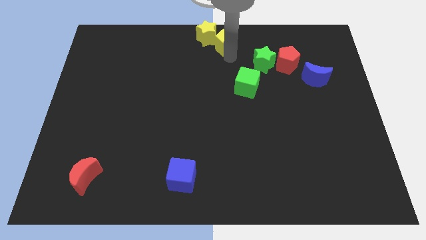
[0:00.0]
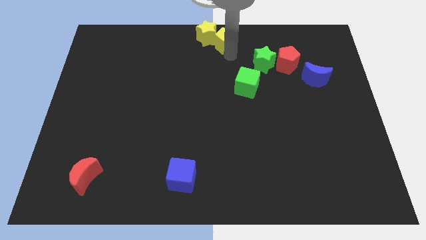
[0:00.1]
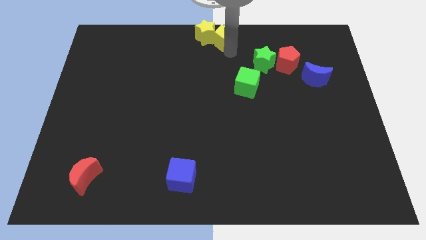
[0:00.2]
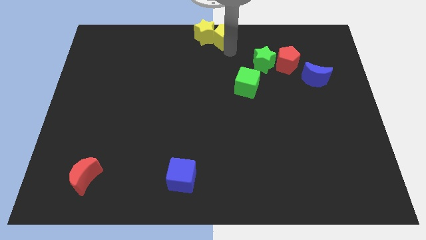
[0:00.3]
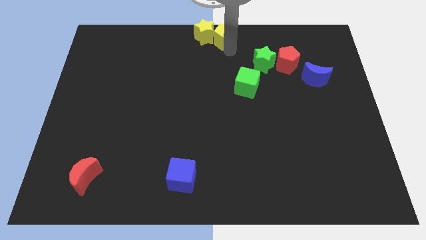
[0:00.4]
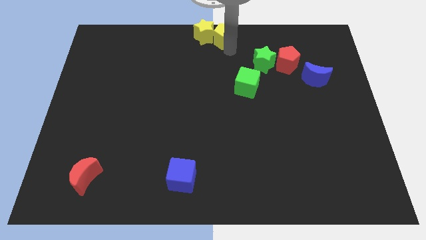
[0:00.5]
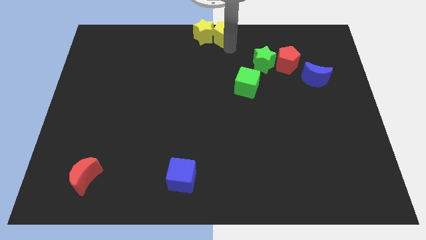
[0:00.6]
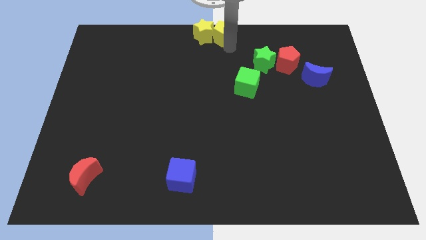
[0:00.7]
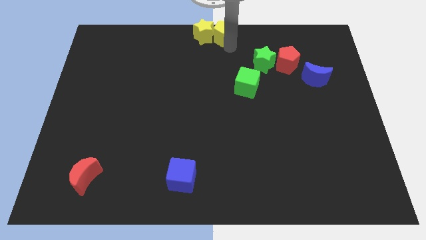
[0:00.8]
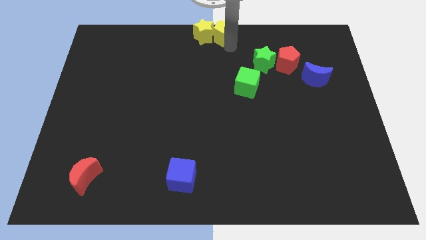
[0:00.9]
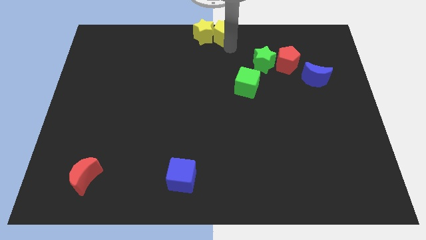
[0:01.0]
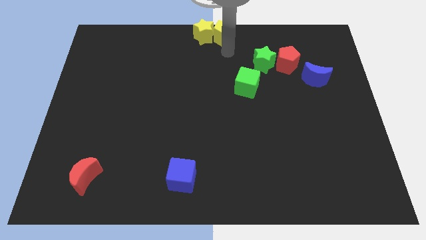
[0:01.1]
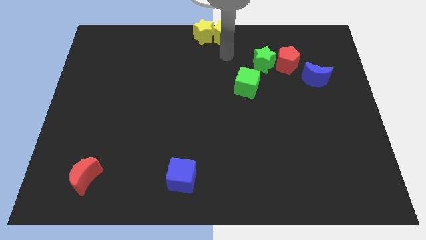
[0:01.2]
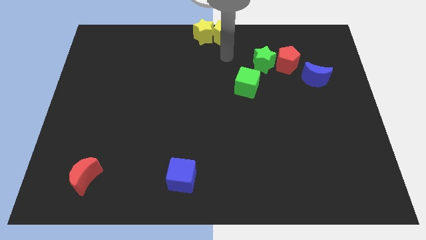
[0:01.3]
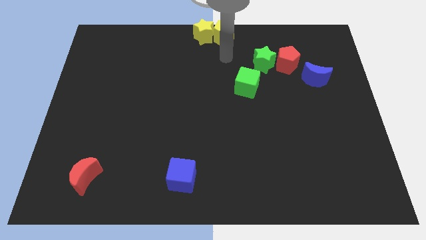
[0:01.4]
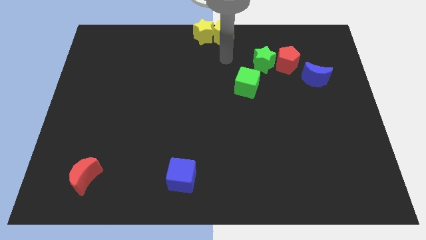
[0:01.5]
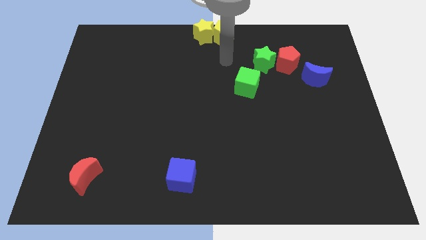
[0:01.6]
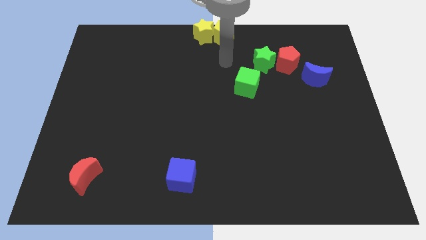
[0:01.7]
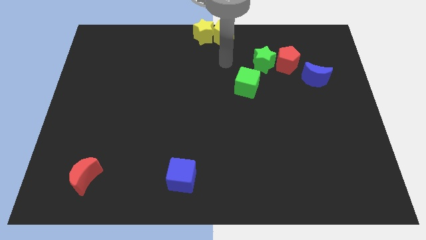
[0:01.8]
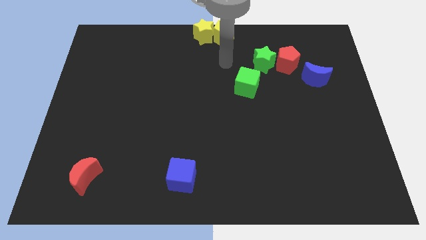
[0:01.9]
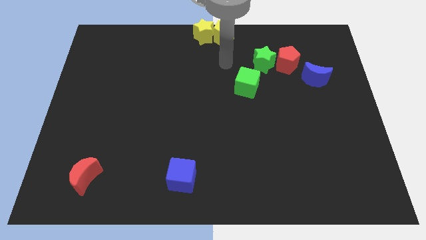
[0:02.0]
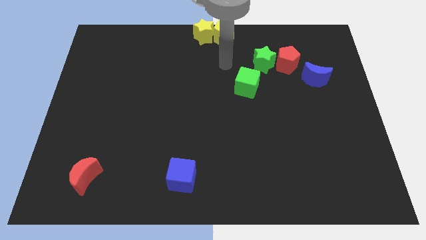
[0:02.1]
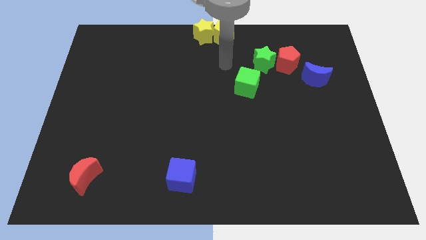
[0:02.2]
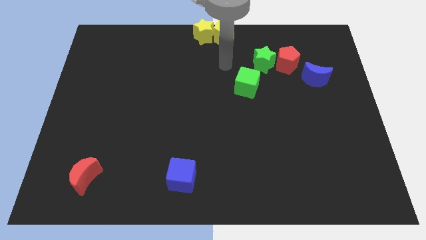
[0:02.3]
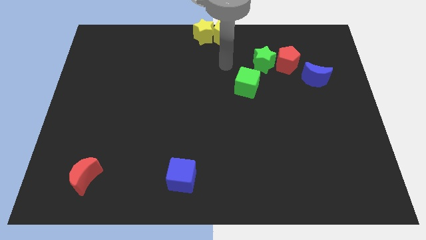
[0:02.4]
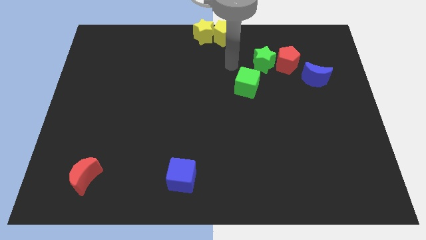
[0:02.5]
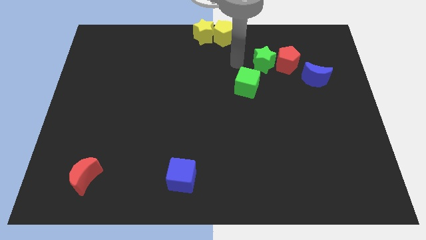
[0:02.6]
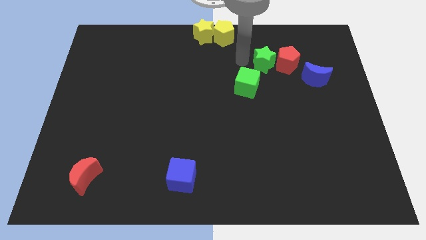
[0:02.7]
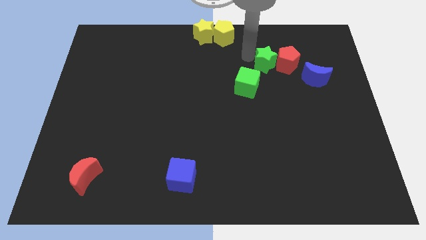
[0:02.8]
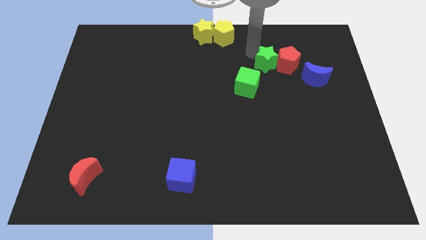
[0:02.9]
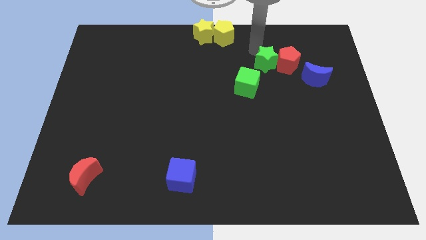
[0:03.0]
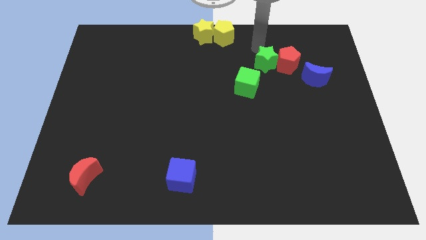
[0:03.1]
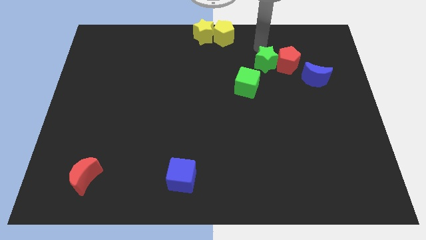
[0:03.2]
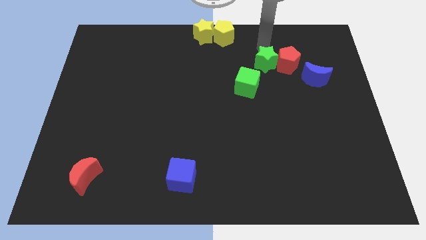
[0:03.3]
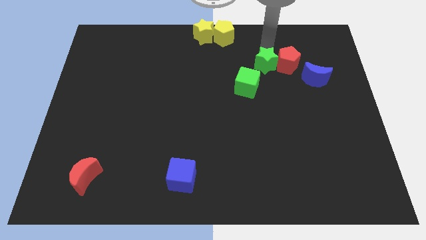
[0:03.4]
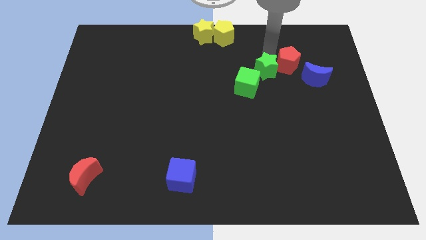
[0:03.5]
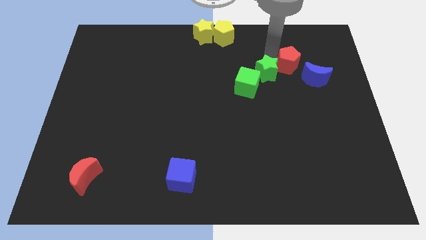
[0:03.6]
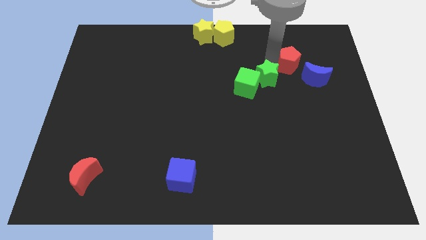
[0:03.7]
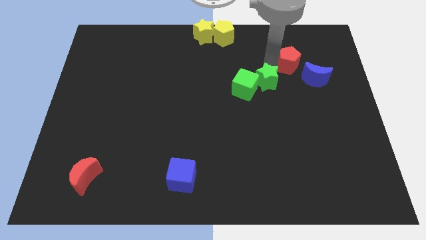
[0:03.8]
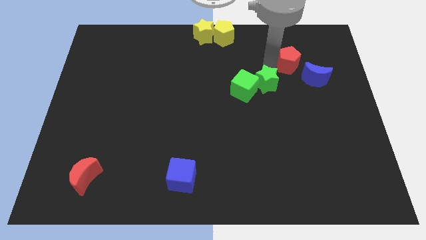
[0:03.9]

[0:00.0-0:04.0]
move the yellow pentagon to the right of the yellow star

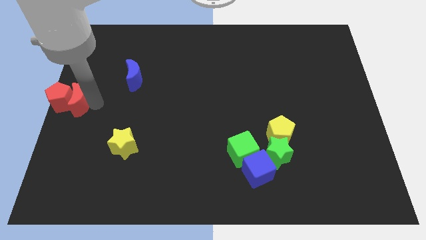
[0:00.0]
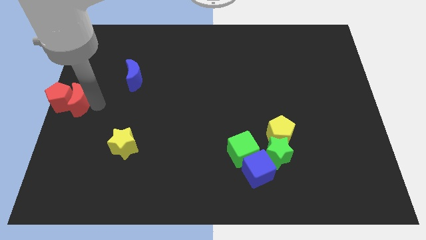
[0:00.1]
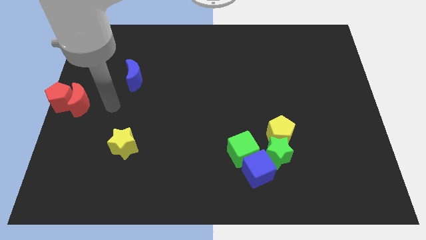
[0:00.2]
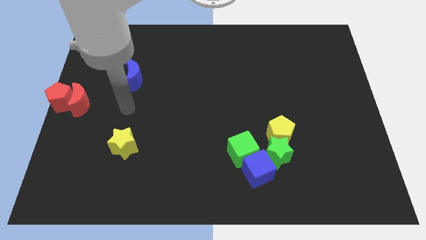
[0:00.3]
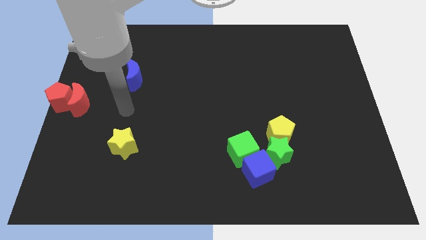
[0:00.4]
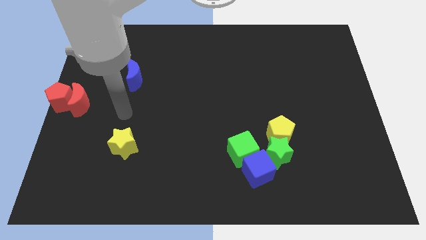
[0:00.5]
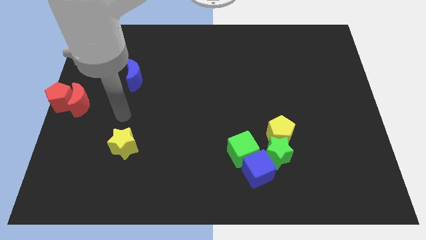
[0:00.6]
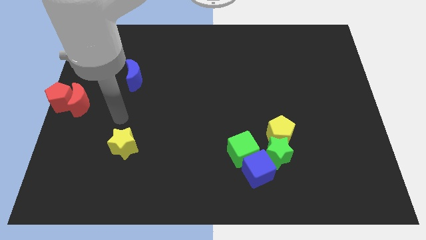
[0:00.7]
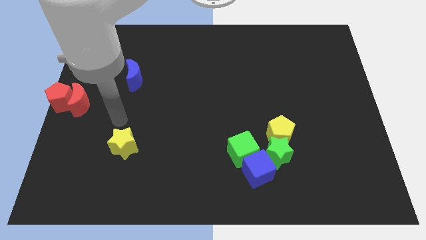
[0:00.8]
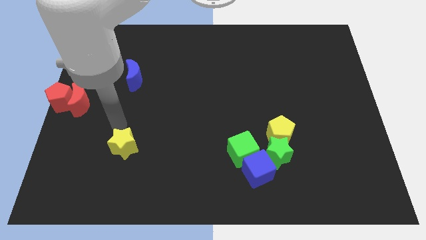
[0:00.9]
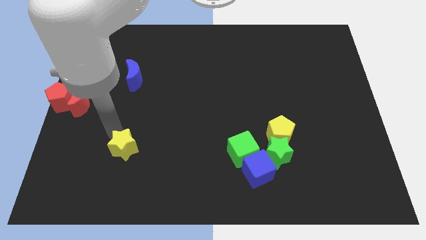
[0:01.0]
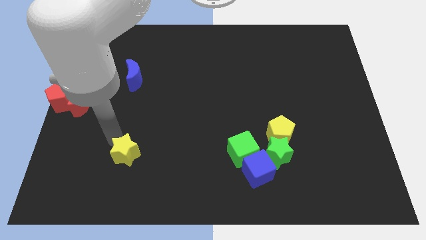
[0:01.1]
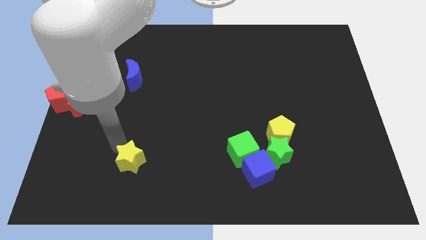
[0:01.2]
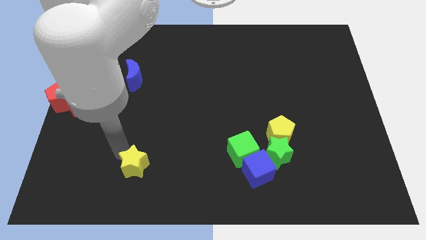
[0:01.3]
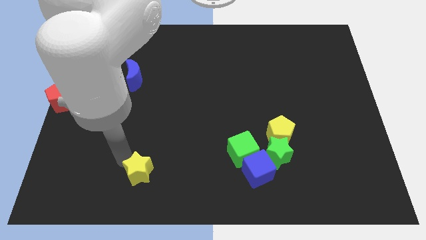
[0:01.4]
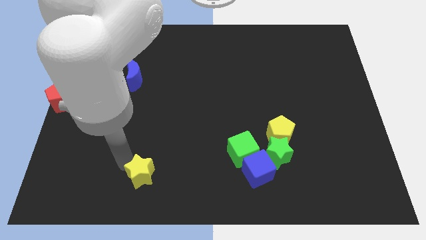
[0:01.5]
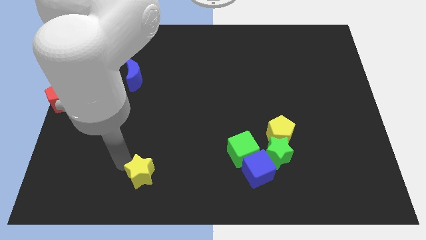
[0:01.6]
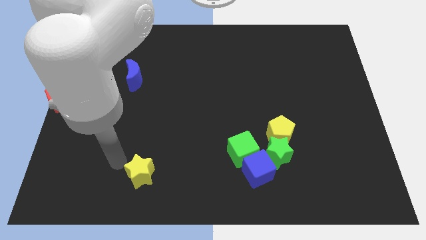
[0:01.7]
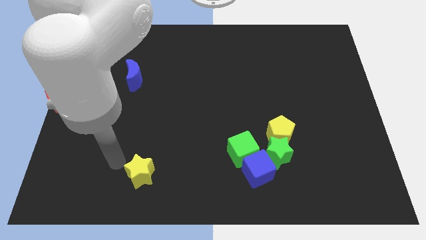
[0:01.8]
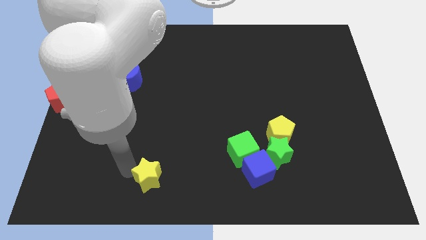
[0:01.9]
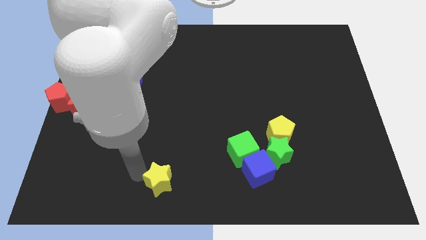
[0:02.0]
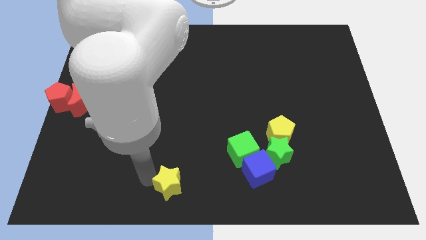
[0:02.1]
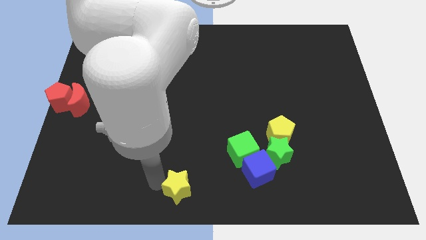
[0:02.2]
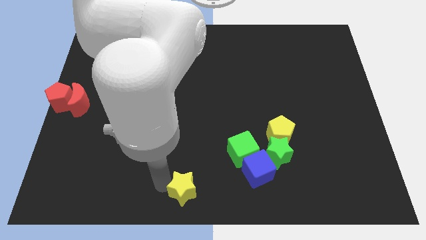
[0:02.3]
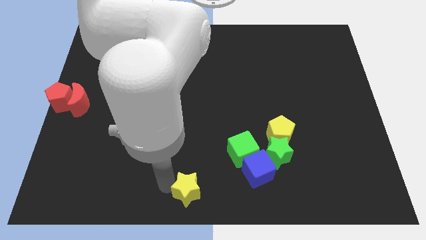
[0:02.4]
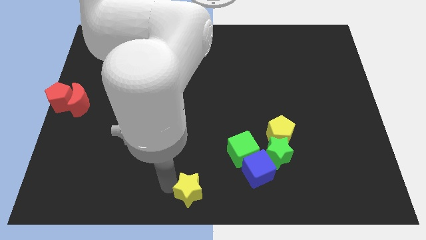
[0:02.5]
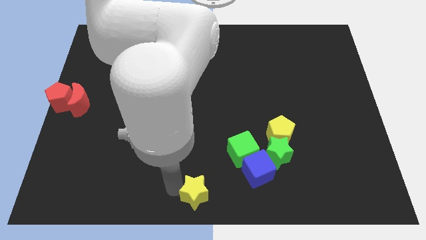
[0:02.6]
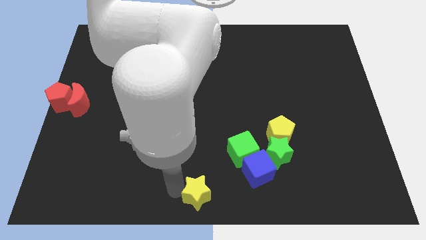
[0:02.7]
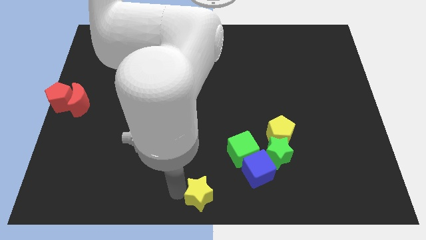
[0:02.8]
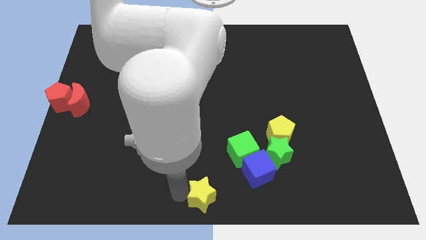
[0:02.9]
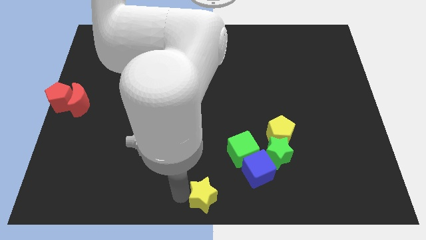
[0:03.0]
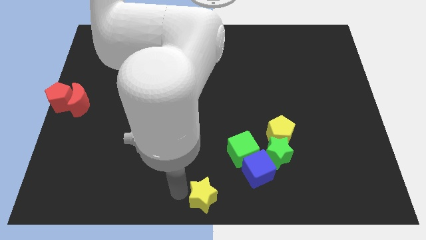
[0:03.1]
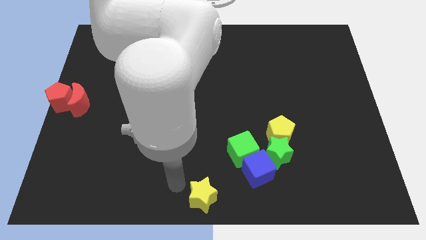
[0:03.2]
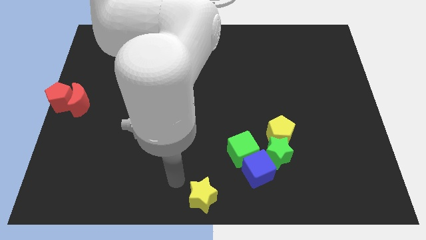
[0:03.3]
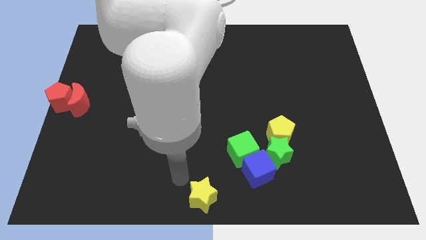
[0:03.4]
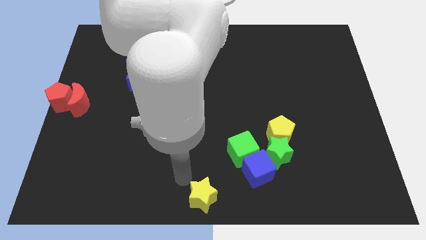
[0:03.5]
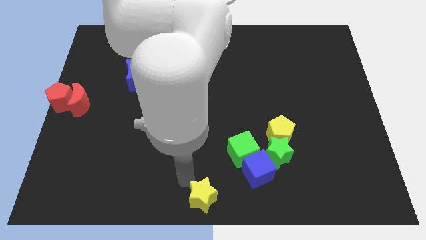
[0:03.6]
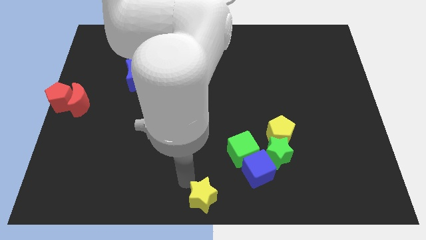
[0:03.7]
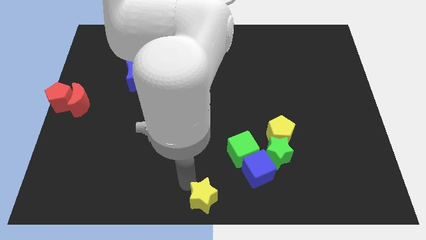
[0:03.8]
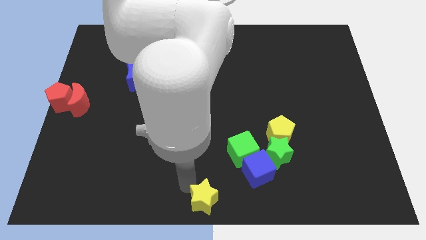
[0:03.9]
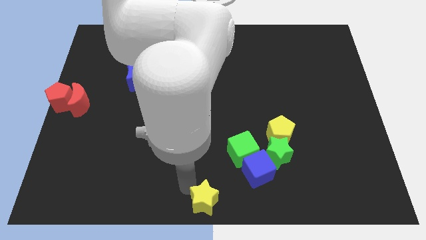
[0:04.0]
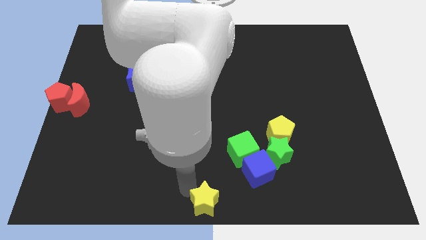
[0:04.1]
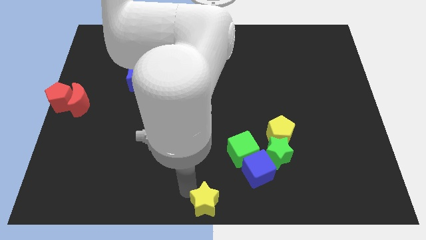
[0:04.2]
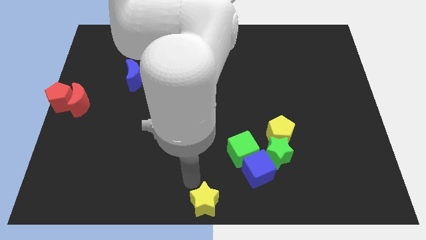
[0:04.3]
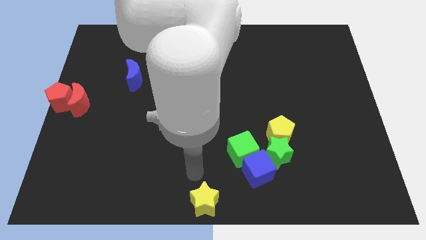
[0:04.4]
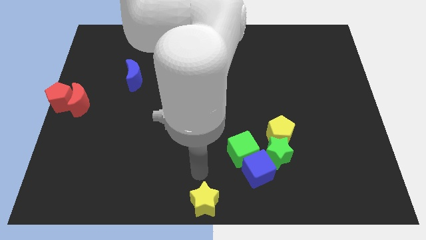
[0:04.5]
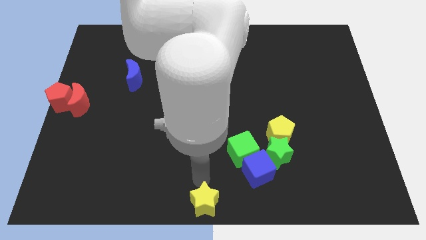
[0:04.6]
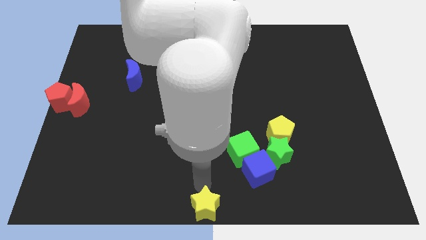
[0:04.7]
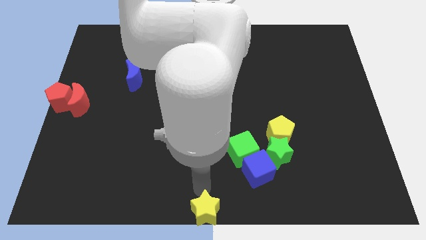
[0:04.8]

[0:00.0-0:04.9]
slide the yellow star to the bottom center of the table

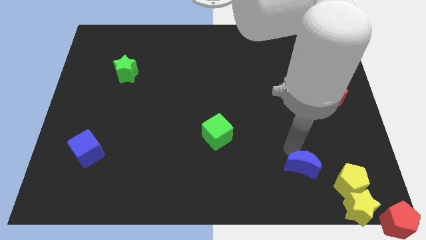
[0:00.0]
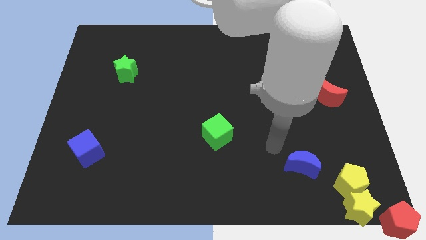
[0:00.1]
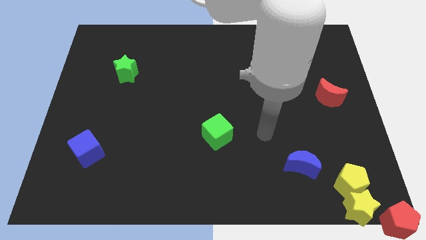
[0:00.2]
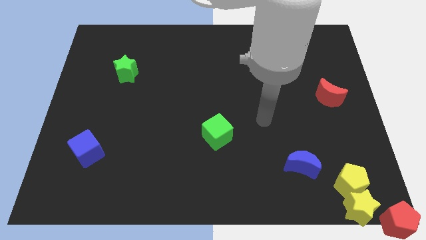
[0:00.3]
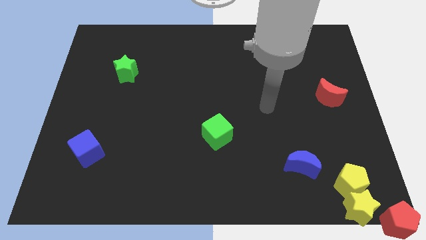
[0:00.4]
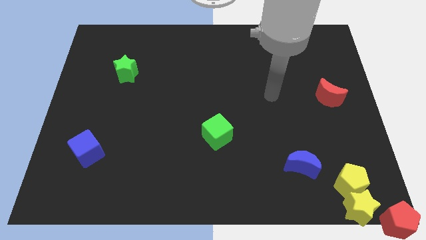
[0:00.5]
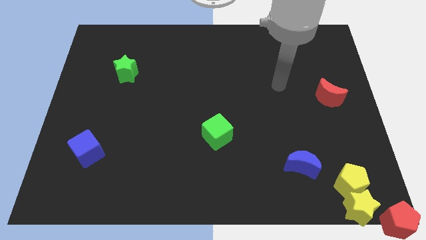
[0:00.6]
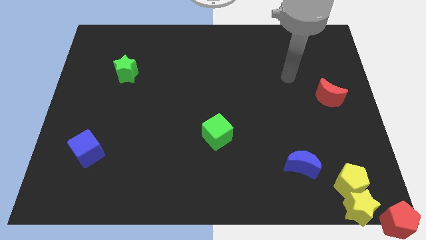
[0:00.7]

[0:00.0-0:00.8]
move your hand away from the blue moon
